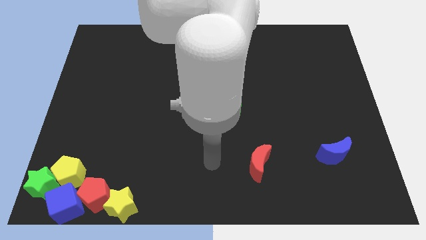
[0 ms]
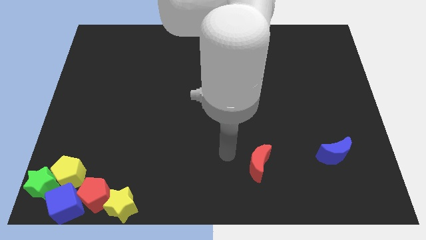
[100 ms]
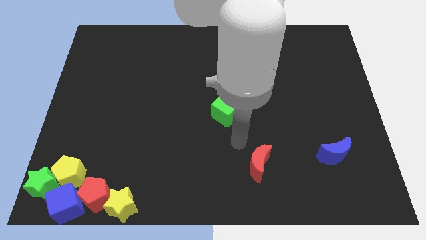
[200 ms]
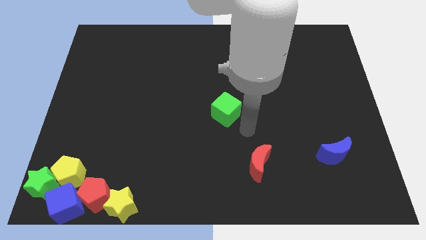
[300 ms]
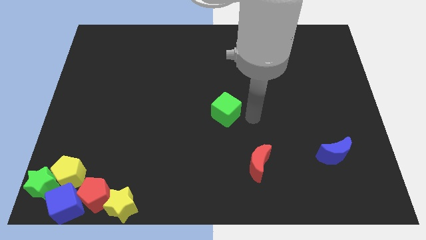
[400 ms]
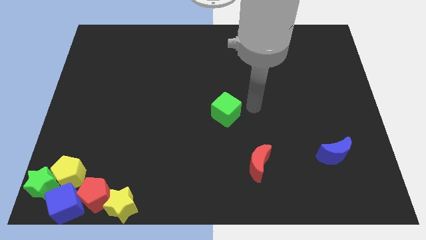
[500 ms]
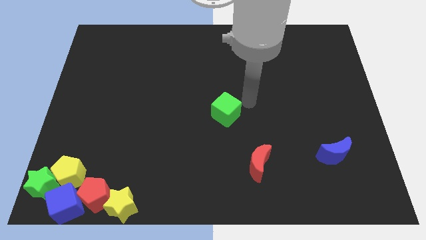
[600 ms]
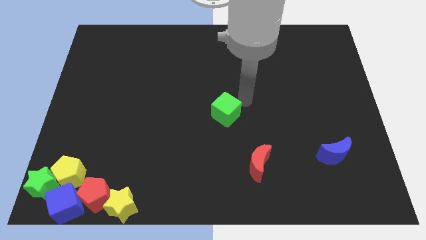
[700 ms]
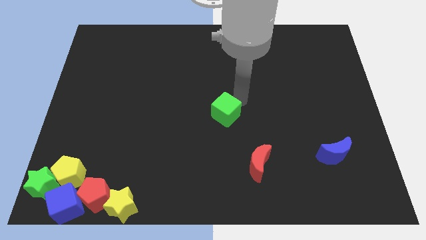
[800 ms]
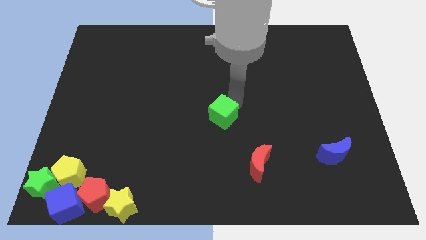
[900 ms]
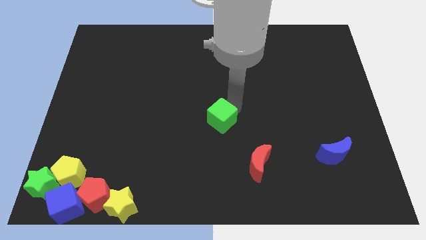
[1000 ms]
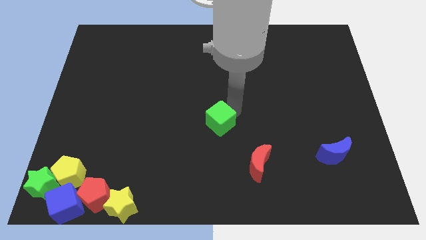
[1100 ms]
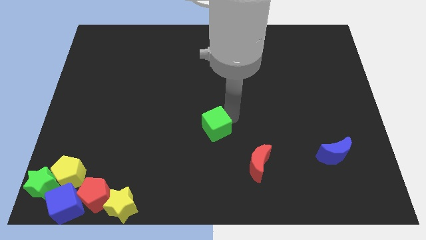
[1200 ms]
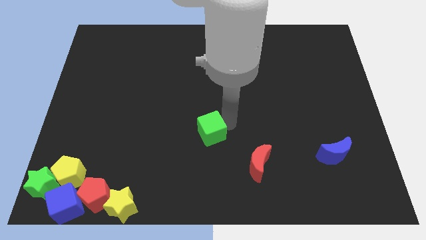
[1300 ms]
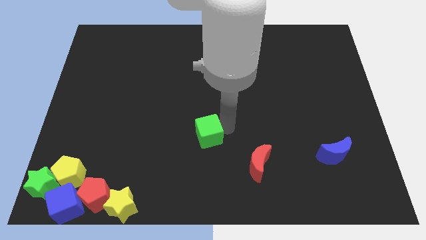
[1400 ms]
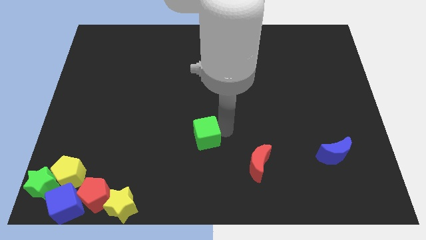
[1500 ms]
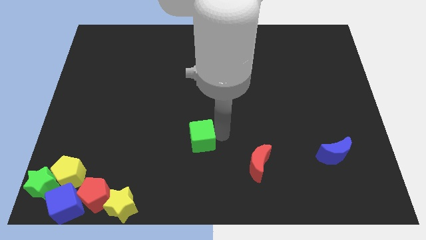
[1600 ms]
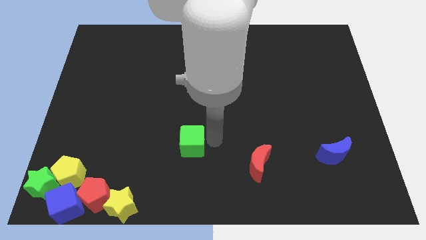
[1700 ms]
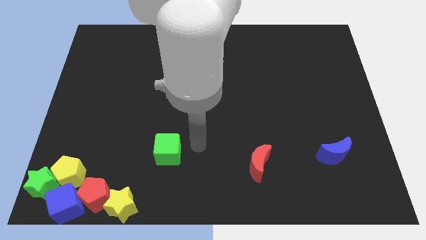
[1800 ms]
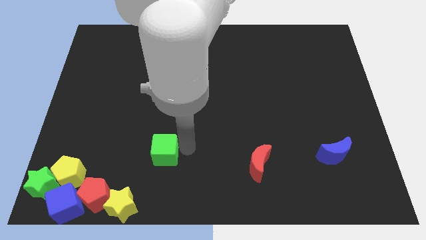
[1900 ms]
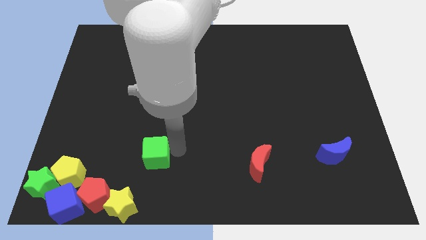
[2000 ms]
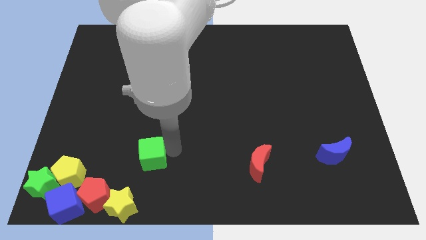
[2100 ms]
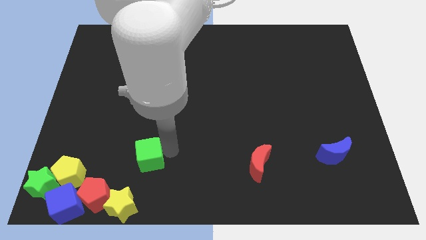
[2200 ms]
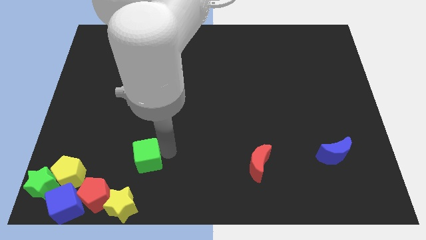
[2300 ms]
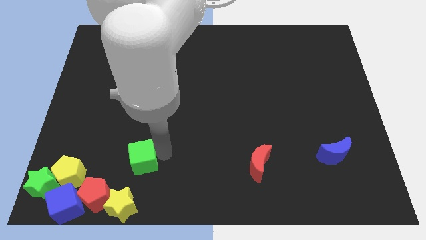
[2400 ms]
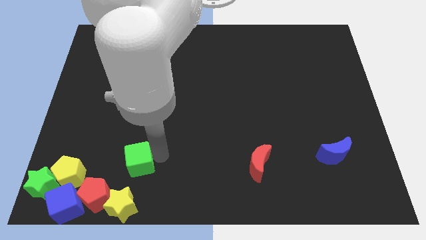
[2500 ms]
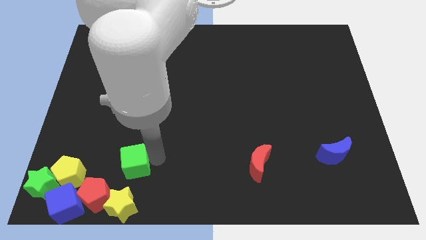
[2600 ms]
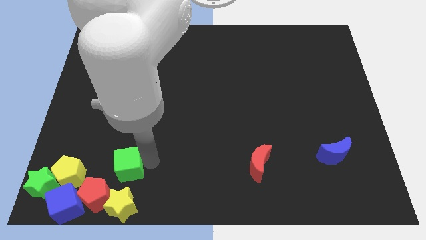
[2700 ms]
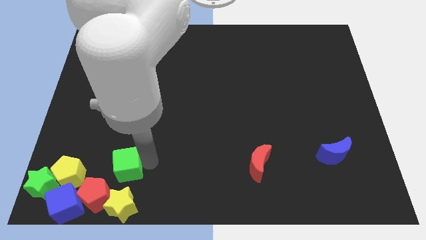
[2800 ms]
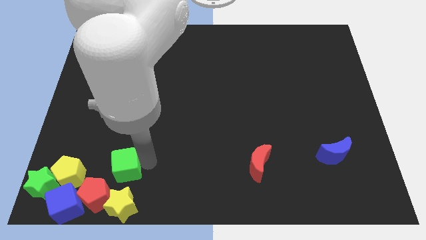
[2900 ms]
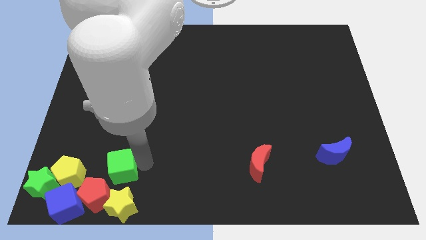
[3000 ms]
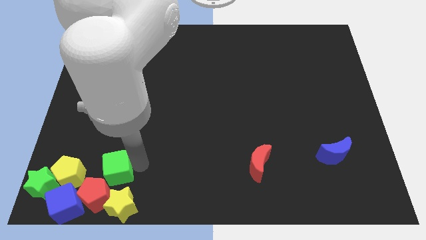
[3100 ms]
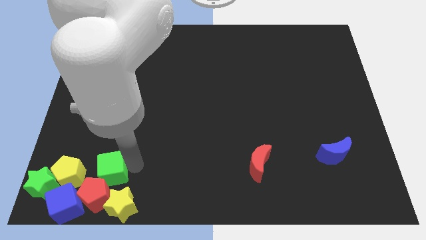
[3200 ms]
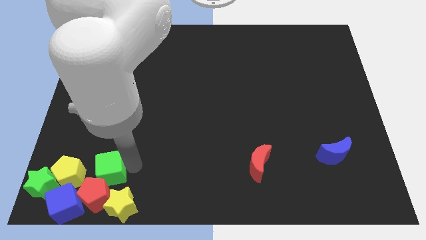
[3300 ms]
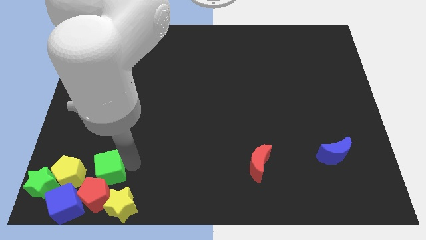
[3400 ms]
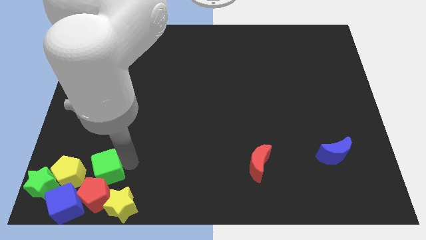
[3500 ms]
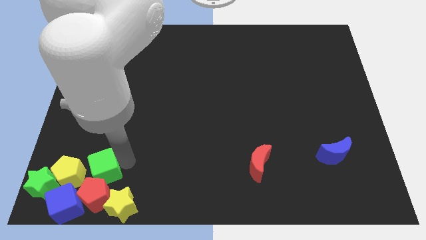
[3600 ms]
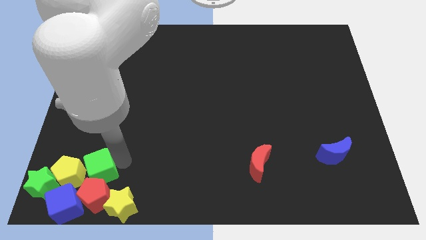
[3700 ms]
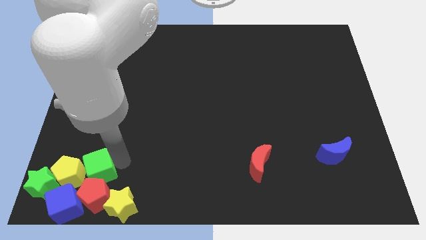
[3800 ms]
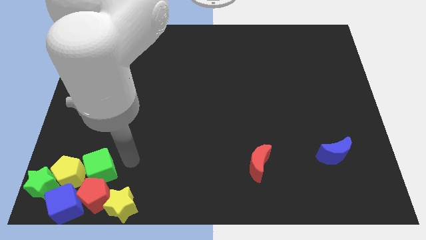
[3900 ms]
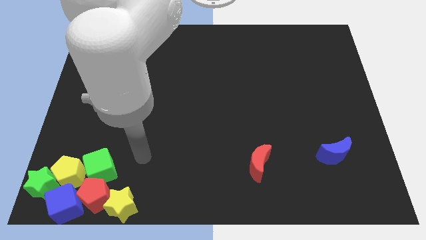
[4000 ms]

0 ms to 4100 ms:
move green cube towards bottom left

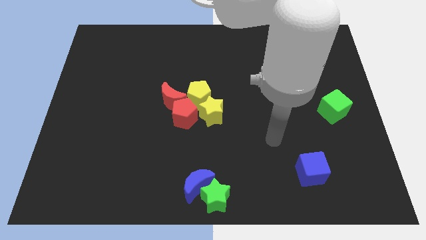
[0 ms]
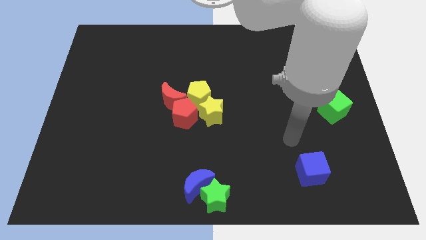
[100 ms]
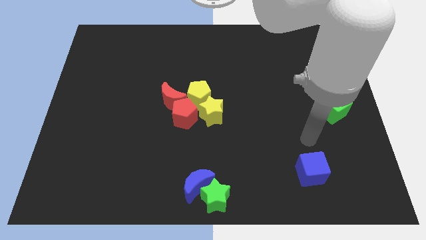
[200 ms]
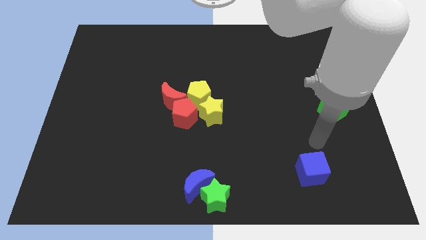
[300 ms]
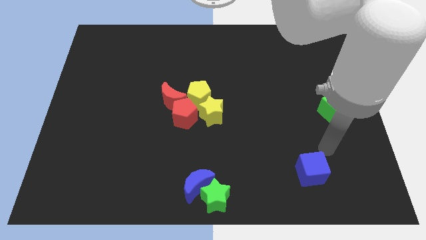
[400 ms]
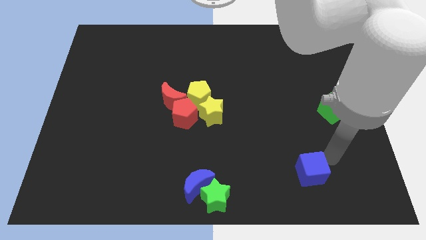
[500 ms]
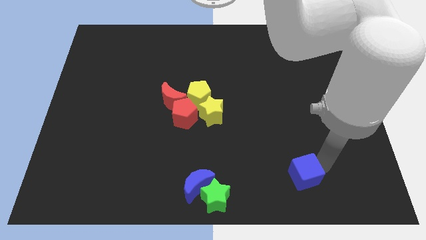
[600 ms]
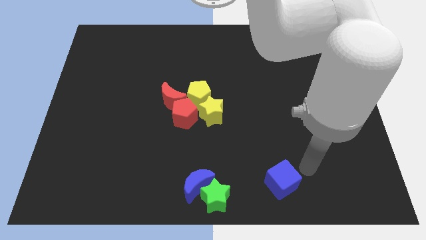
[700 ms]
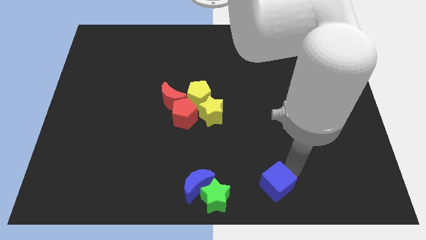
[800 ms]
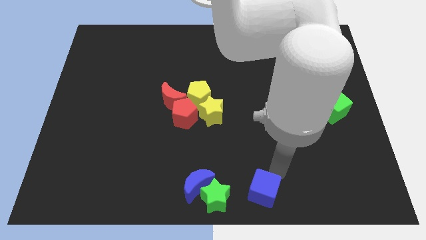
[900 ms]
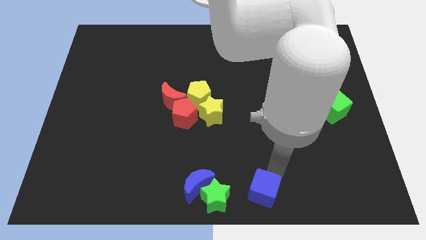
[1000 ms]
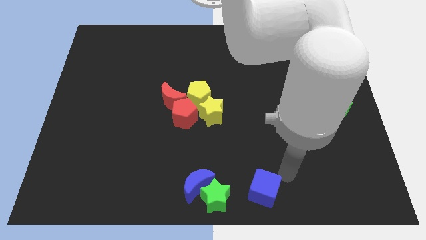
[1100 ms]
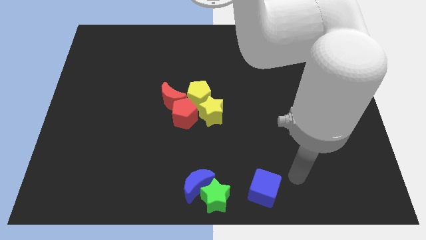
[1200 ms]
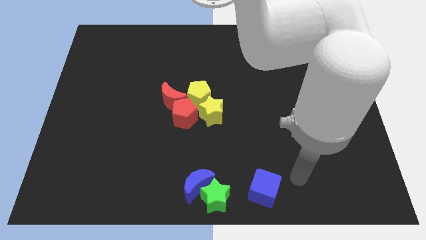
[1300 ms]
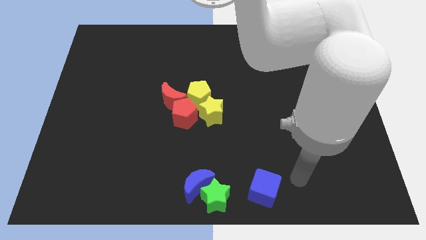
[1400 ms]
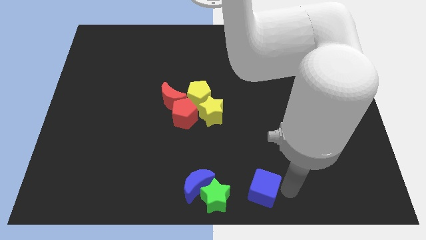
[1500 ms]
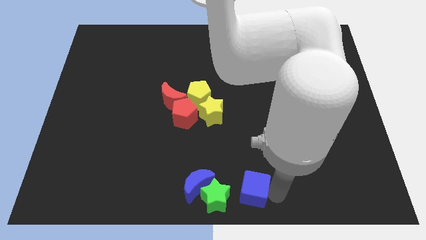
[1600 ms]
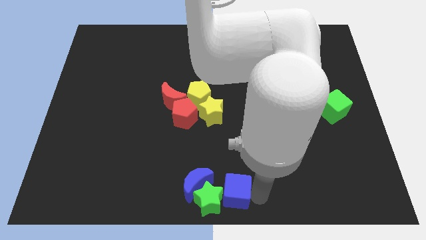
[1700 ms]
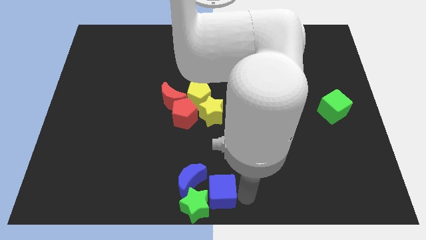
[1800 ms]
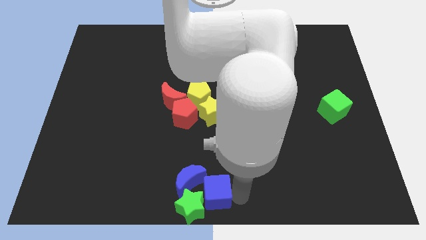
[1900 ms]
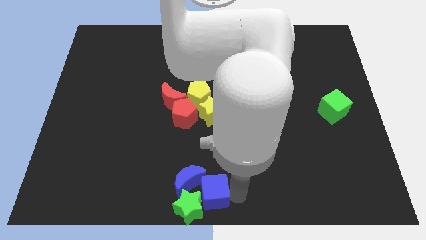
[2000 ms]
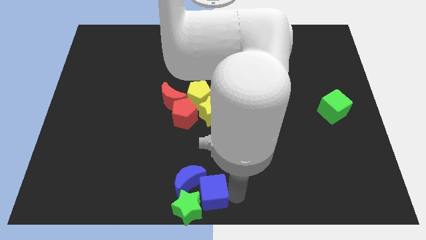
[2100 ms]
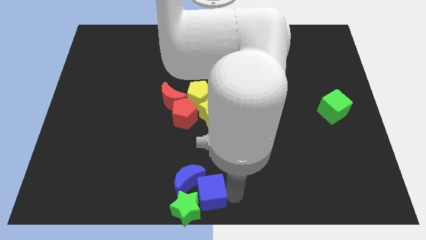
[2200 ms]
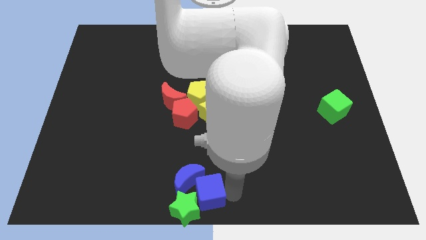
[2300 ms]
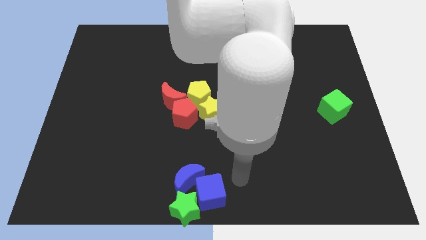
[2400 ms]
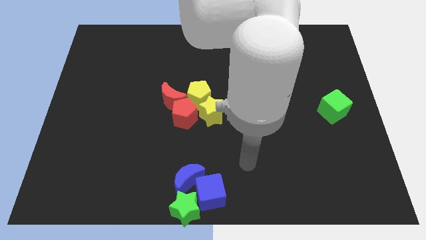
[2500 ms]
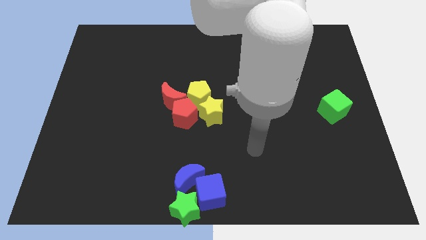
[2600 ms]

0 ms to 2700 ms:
push the blue cube into the green star and blue crescent

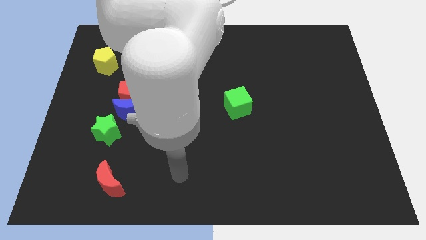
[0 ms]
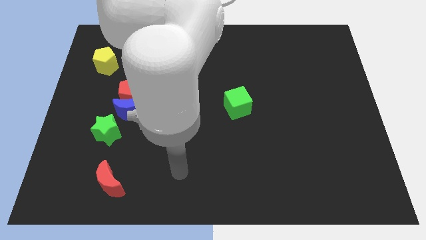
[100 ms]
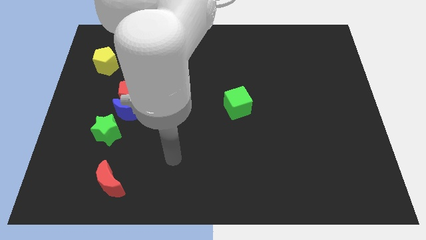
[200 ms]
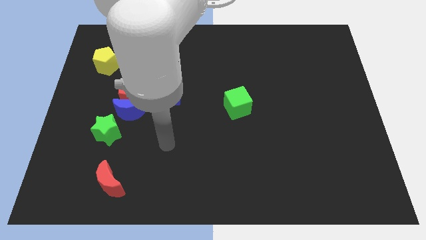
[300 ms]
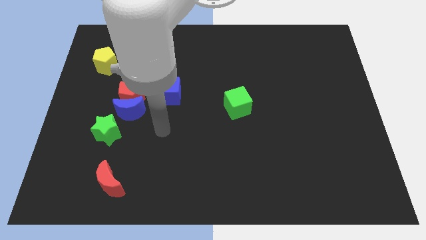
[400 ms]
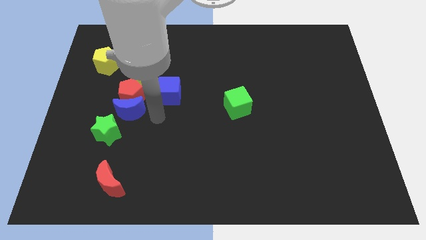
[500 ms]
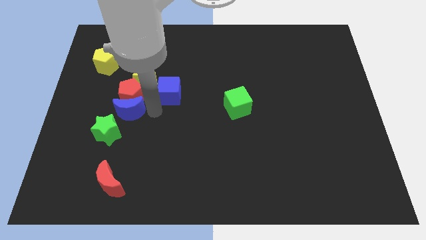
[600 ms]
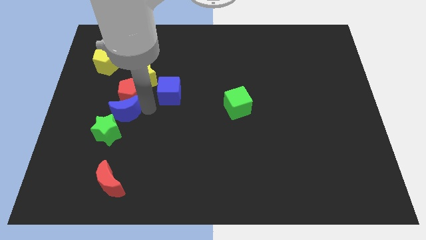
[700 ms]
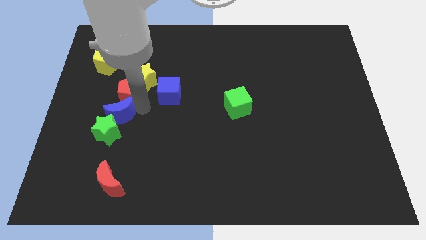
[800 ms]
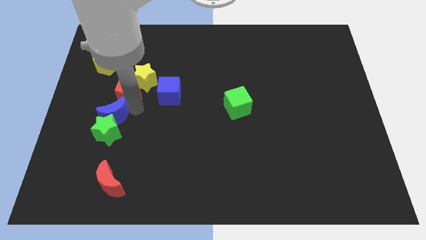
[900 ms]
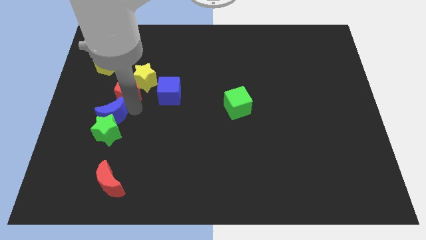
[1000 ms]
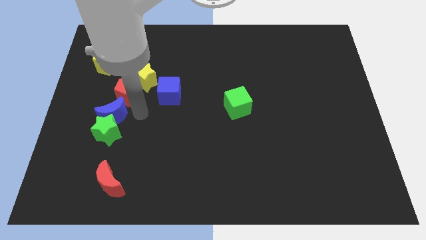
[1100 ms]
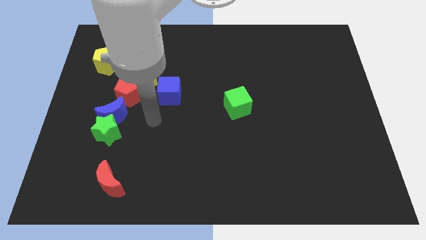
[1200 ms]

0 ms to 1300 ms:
place the blue crescent above the green star

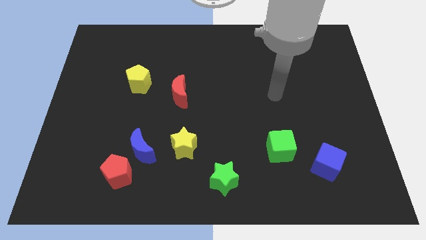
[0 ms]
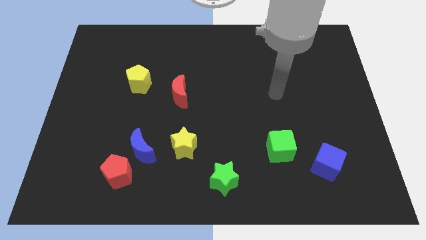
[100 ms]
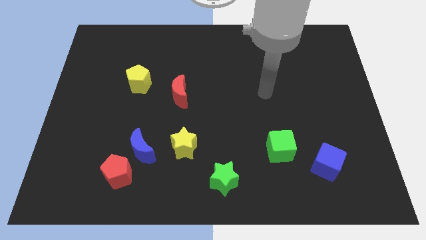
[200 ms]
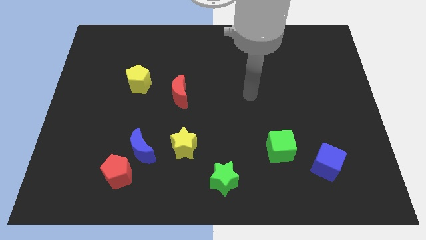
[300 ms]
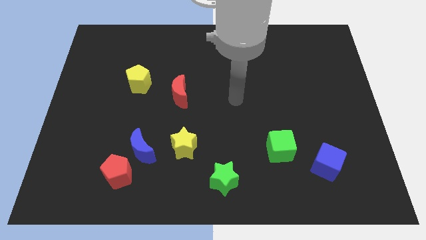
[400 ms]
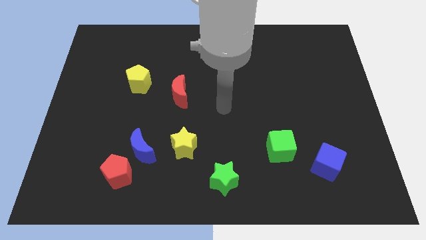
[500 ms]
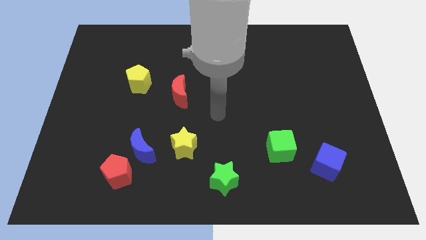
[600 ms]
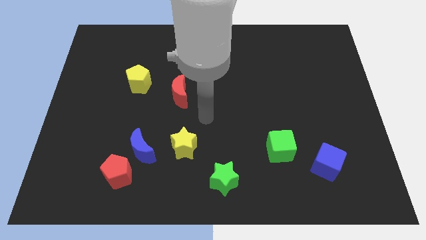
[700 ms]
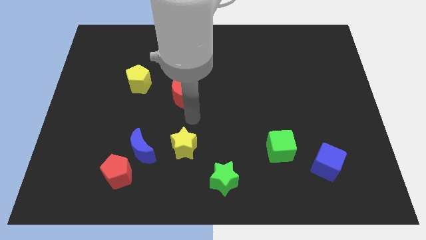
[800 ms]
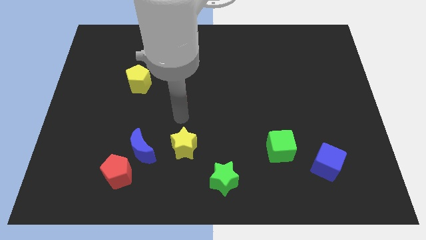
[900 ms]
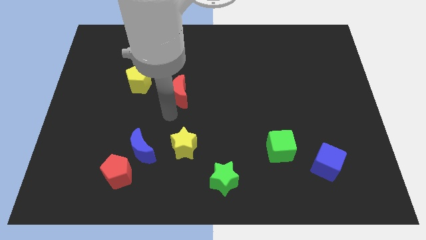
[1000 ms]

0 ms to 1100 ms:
place your arm to the bottom left side of the red moon
